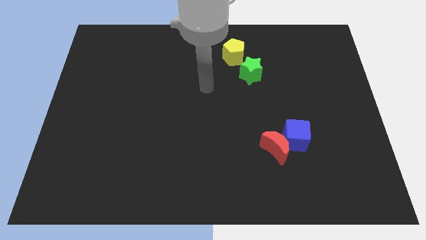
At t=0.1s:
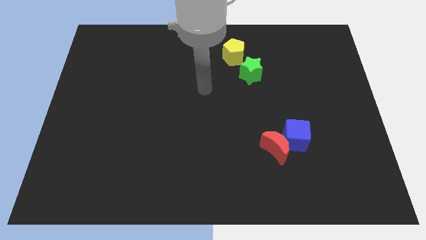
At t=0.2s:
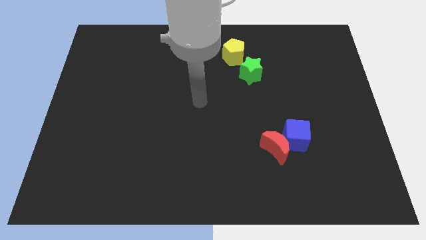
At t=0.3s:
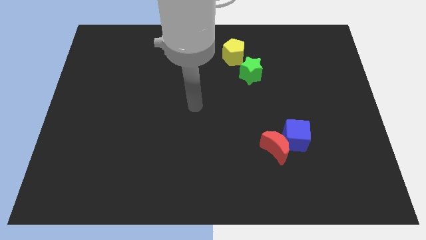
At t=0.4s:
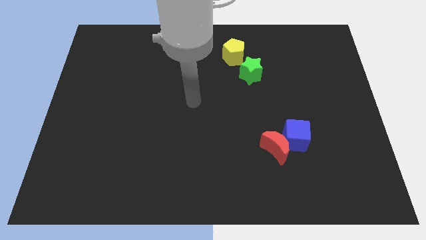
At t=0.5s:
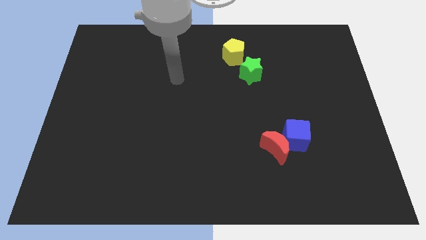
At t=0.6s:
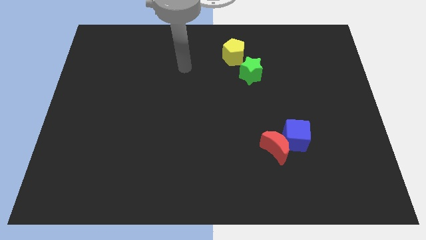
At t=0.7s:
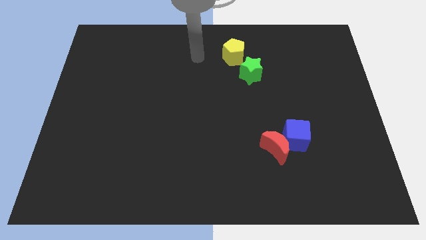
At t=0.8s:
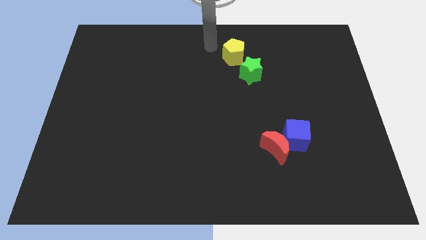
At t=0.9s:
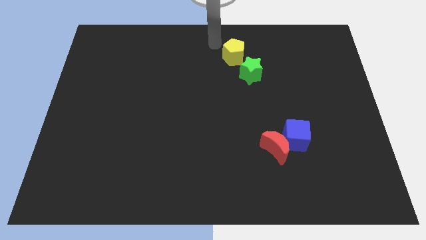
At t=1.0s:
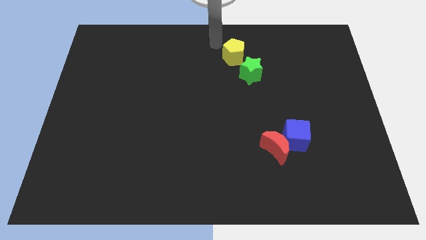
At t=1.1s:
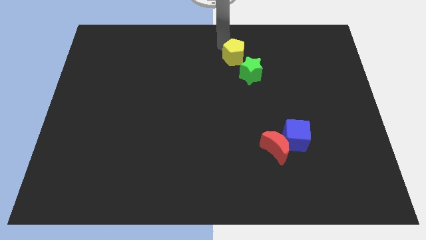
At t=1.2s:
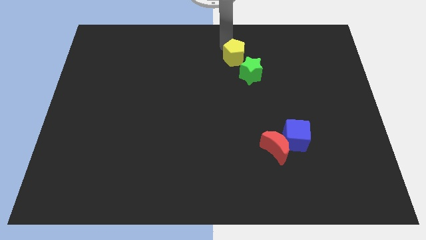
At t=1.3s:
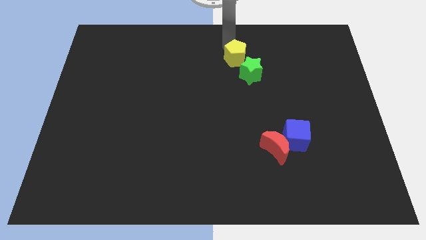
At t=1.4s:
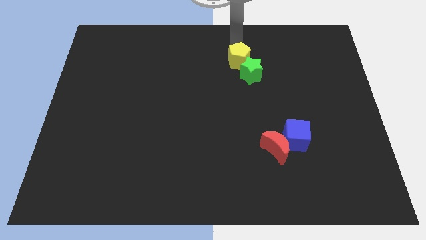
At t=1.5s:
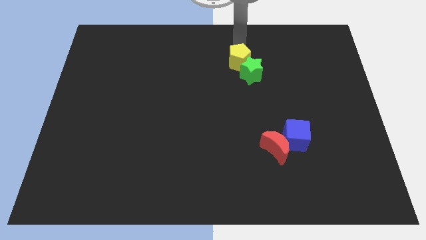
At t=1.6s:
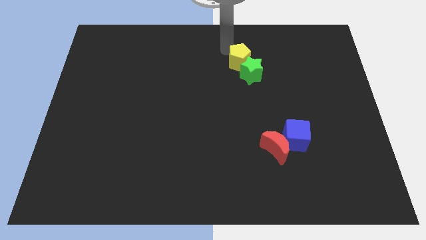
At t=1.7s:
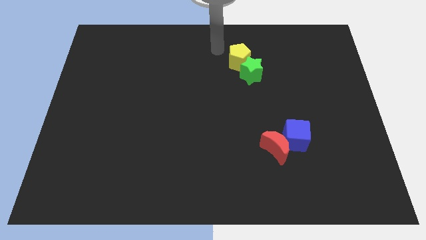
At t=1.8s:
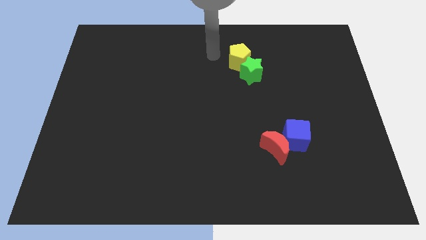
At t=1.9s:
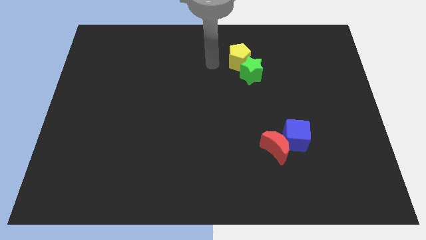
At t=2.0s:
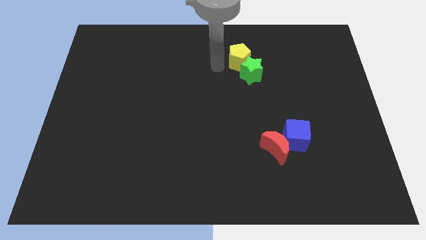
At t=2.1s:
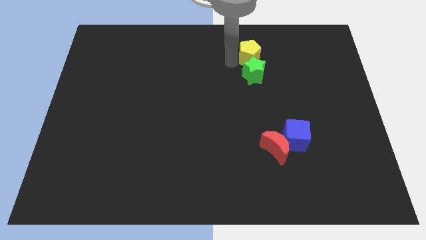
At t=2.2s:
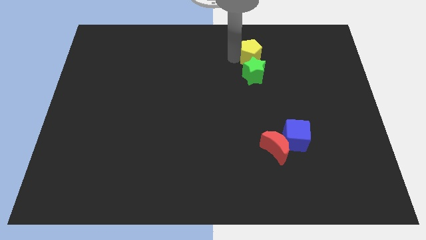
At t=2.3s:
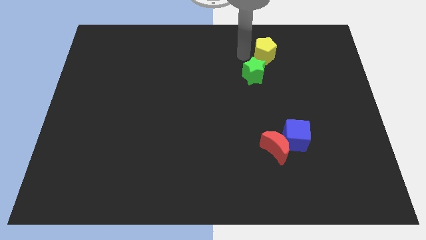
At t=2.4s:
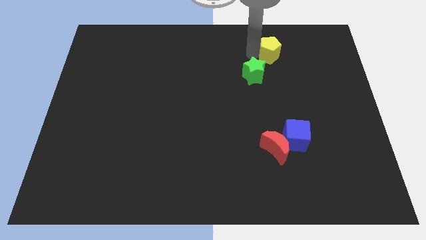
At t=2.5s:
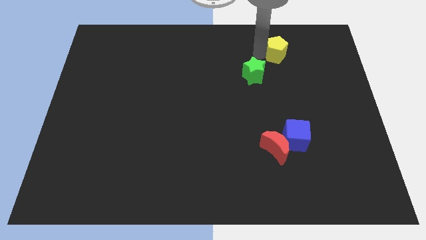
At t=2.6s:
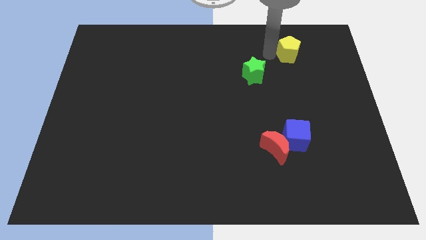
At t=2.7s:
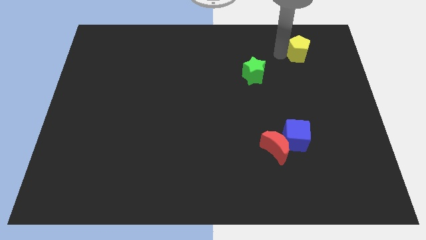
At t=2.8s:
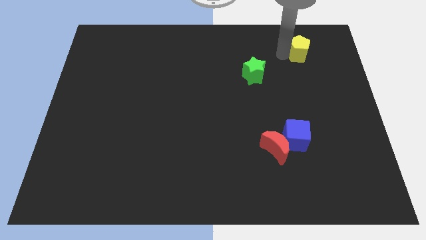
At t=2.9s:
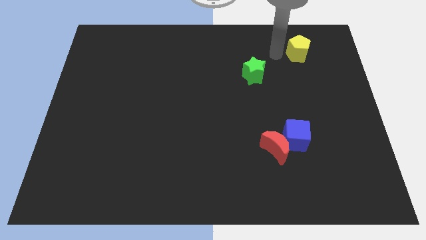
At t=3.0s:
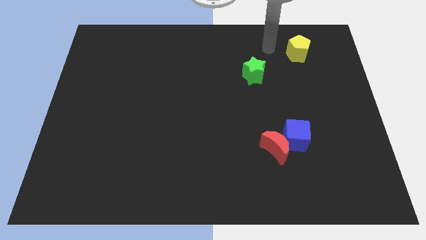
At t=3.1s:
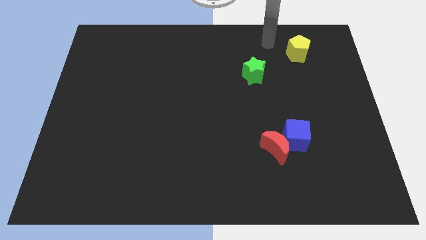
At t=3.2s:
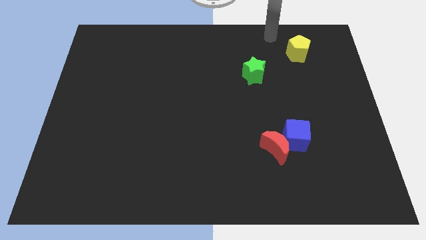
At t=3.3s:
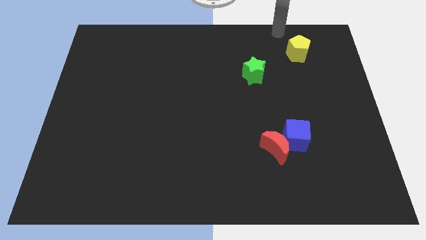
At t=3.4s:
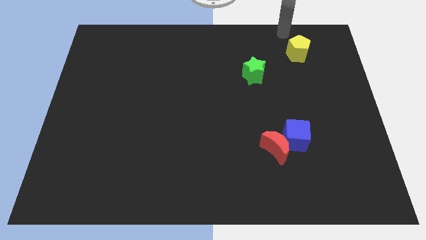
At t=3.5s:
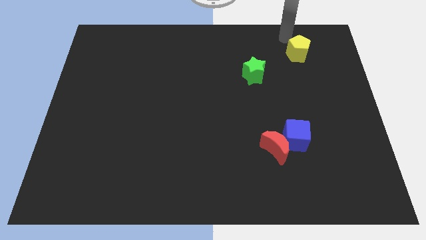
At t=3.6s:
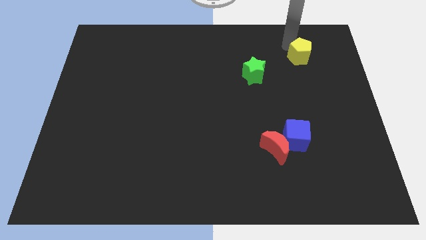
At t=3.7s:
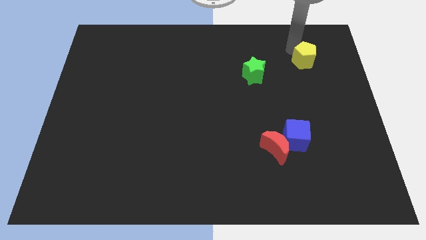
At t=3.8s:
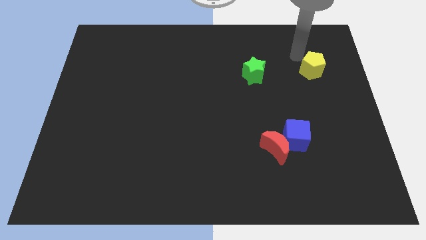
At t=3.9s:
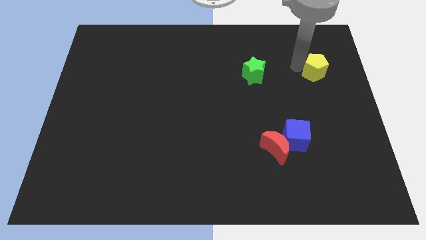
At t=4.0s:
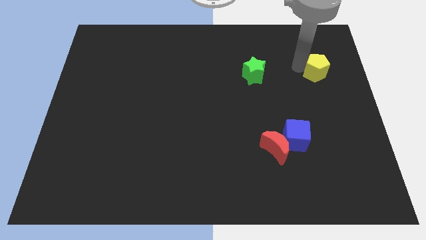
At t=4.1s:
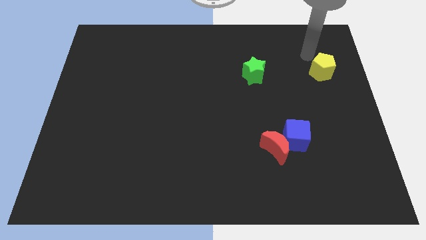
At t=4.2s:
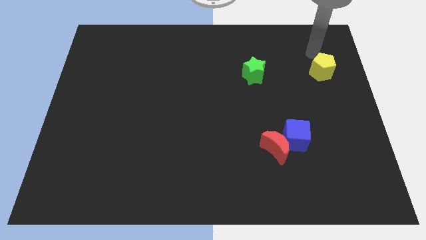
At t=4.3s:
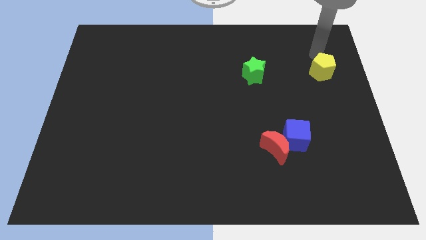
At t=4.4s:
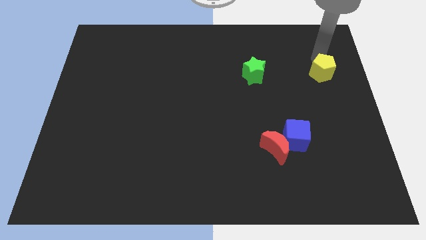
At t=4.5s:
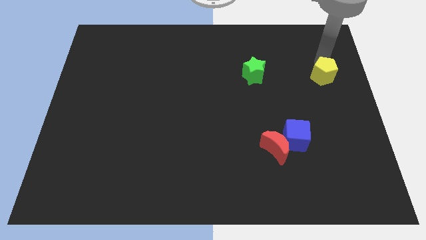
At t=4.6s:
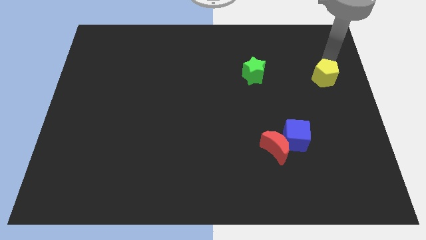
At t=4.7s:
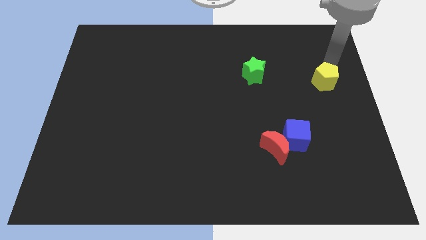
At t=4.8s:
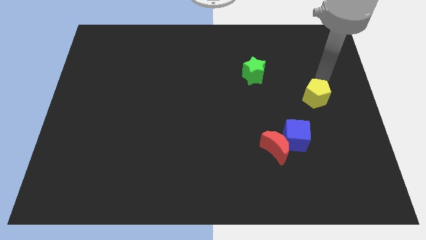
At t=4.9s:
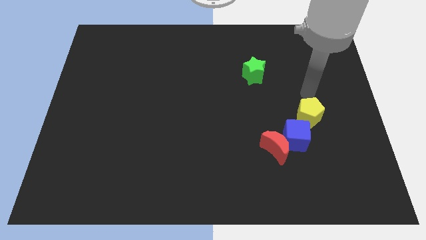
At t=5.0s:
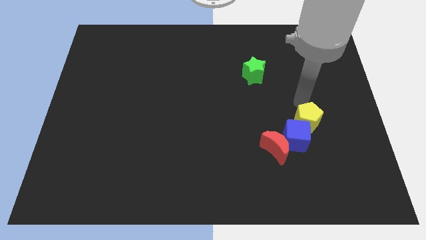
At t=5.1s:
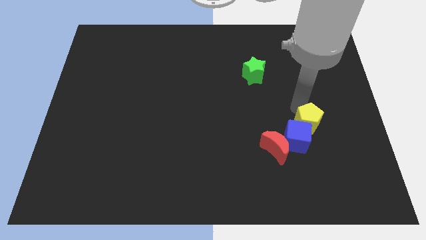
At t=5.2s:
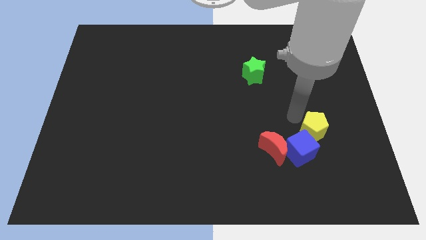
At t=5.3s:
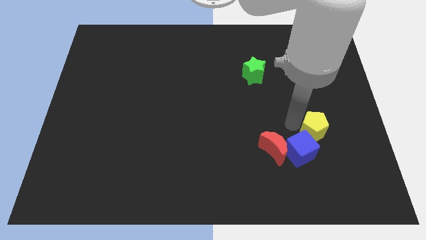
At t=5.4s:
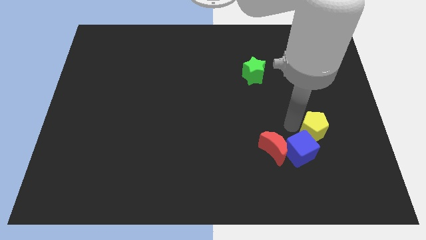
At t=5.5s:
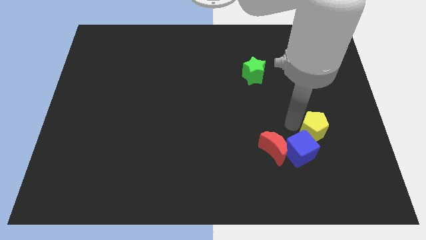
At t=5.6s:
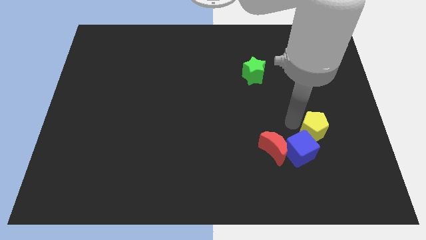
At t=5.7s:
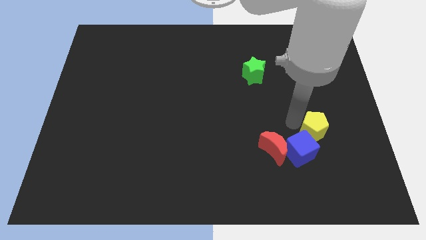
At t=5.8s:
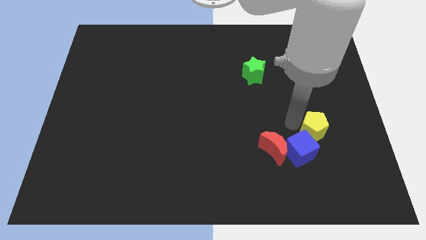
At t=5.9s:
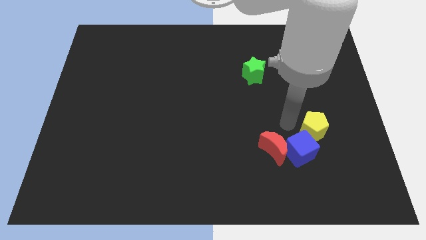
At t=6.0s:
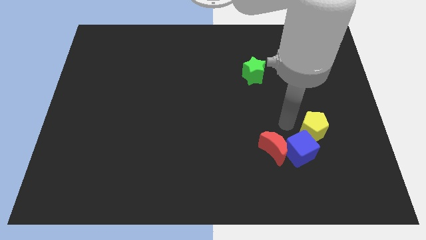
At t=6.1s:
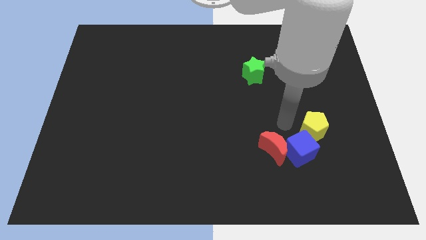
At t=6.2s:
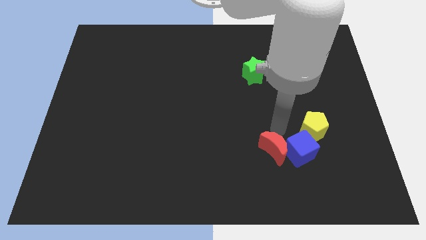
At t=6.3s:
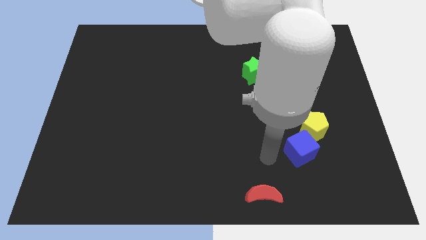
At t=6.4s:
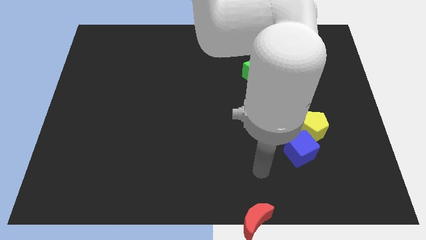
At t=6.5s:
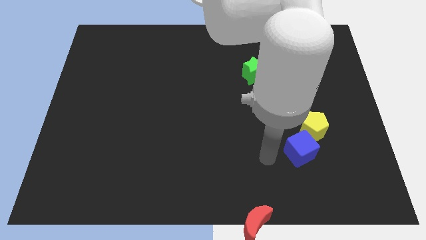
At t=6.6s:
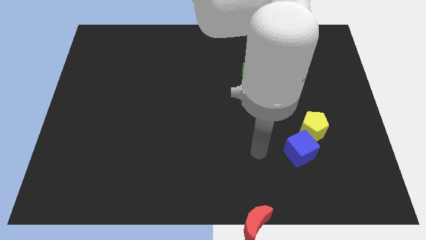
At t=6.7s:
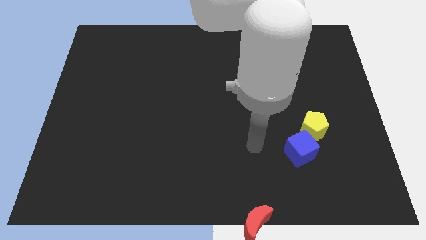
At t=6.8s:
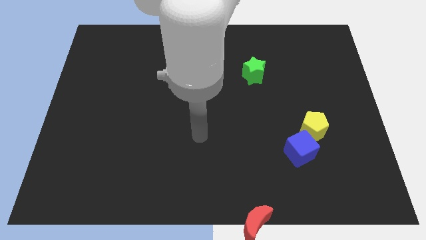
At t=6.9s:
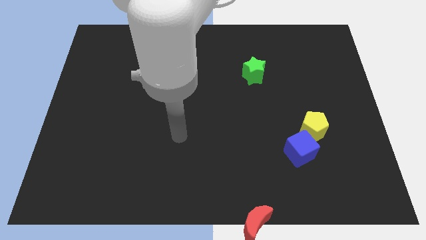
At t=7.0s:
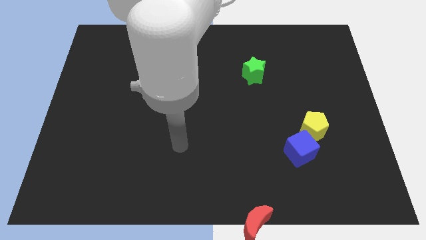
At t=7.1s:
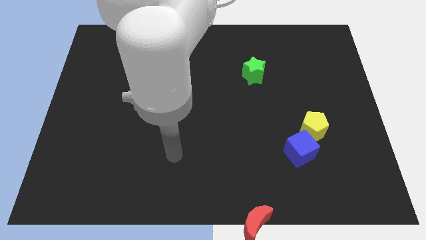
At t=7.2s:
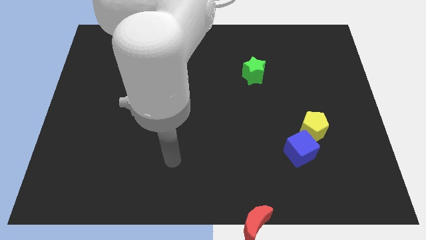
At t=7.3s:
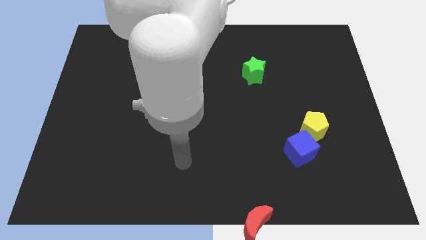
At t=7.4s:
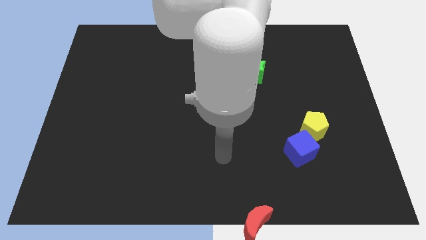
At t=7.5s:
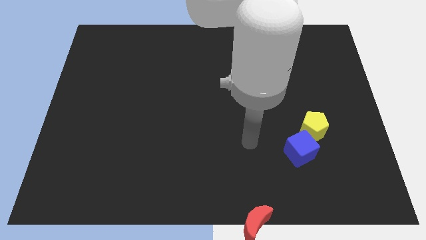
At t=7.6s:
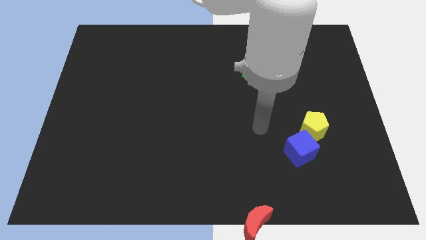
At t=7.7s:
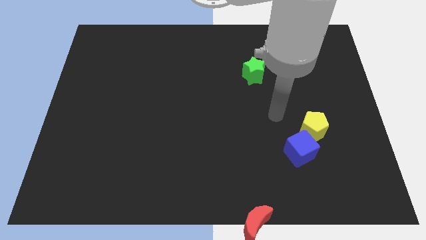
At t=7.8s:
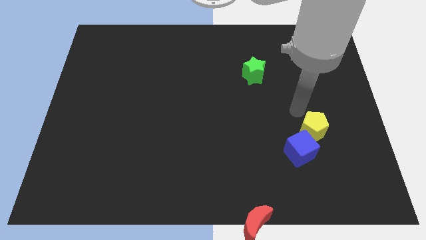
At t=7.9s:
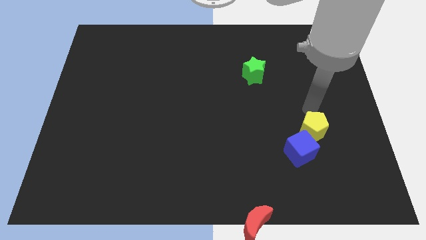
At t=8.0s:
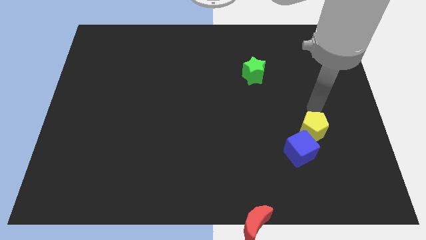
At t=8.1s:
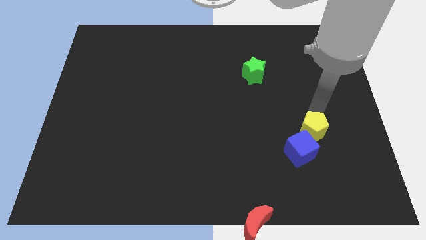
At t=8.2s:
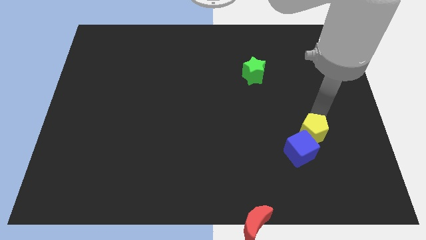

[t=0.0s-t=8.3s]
move the yellow block close to the cube

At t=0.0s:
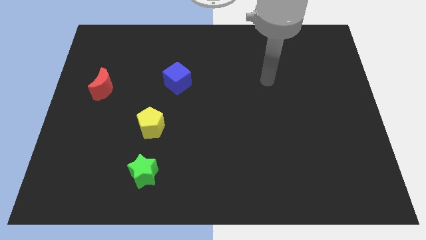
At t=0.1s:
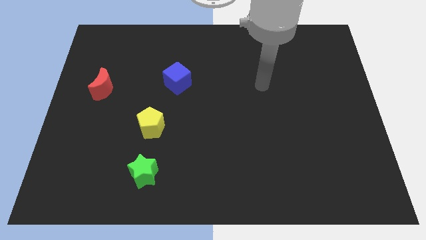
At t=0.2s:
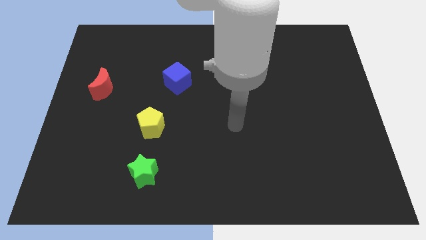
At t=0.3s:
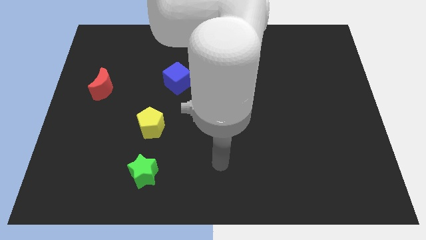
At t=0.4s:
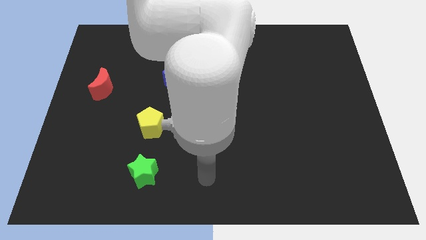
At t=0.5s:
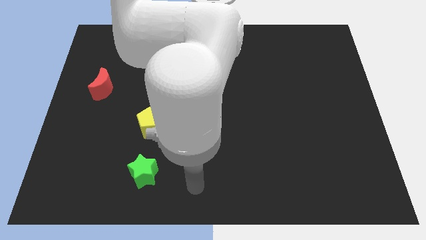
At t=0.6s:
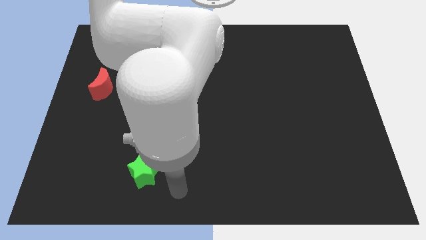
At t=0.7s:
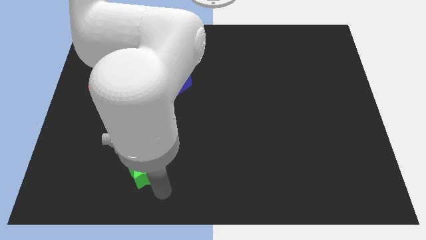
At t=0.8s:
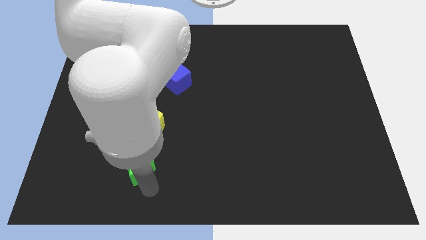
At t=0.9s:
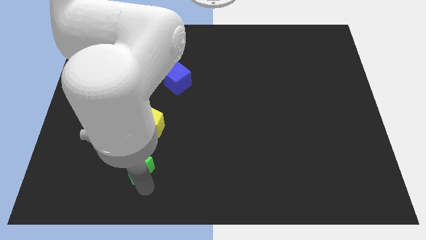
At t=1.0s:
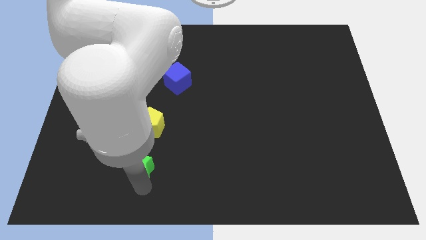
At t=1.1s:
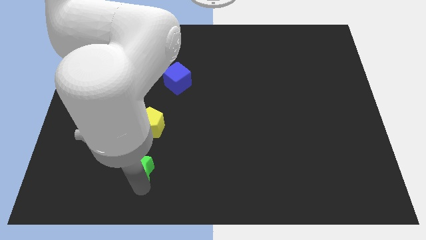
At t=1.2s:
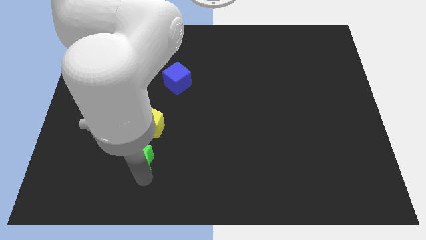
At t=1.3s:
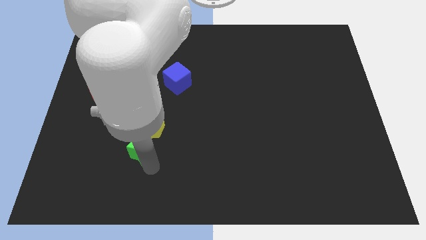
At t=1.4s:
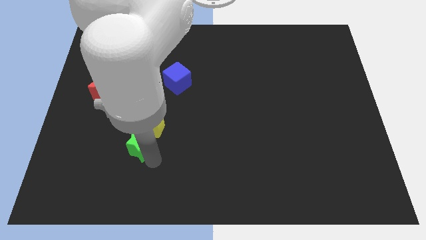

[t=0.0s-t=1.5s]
slide the green star to the yellow pentagon
